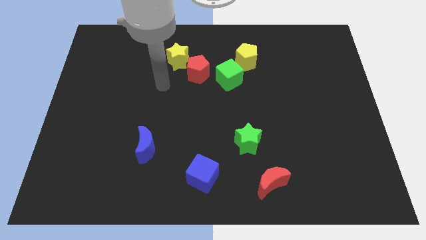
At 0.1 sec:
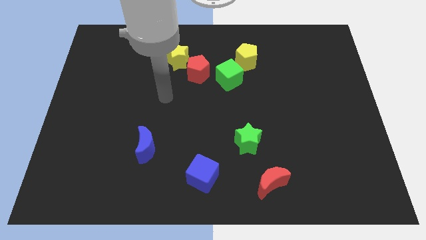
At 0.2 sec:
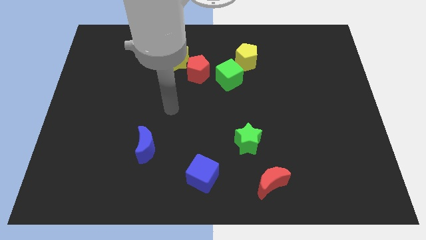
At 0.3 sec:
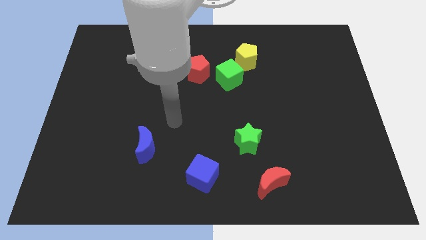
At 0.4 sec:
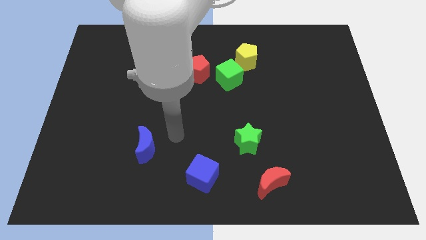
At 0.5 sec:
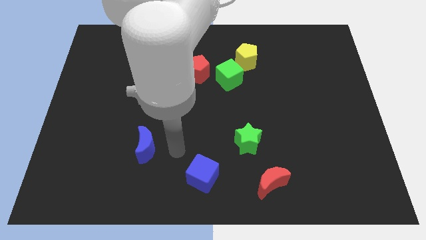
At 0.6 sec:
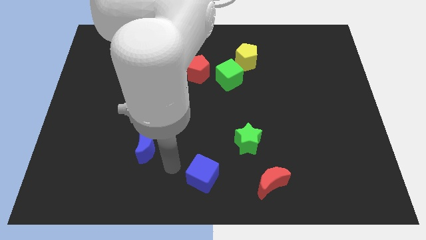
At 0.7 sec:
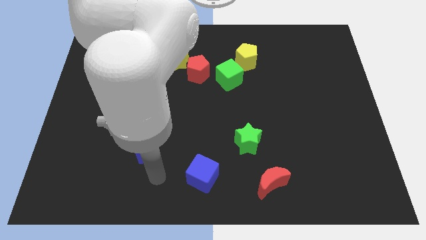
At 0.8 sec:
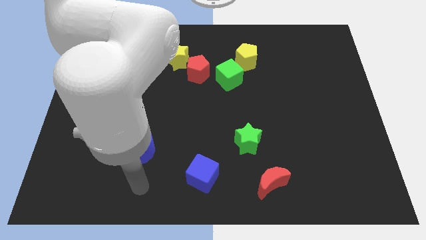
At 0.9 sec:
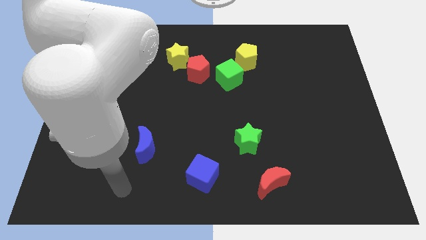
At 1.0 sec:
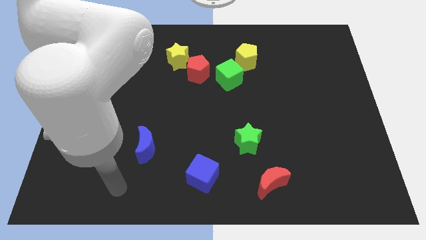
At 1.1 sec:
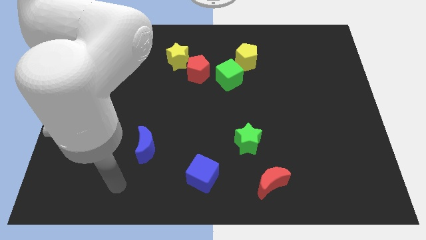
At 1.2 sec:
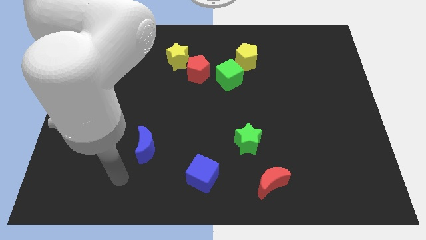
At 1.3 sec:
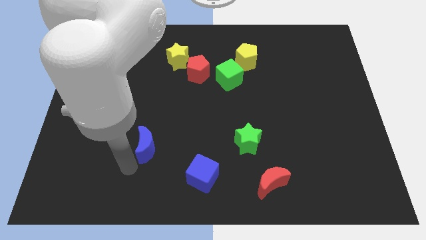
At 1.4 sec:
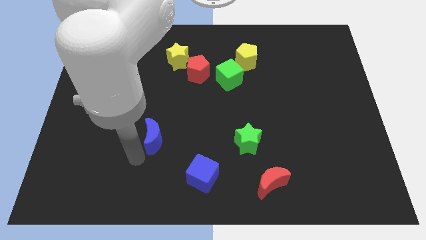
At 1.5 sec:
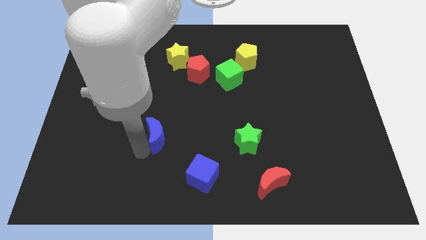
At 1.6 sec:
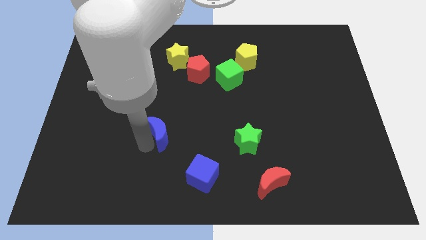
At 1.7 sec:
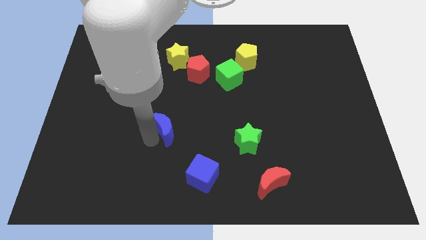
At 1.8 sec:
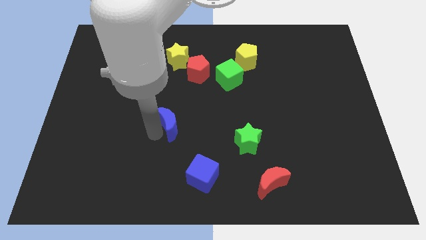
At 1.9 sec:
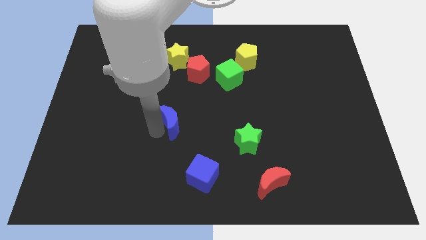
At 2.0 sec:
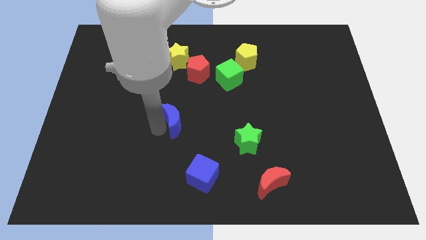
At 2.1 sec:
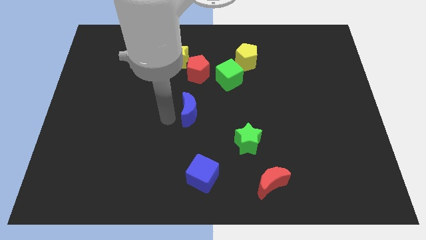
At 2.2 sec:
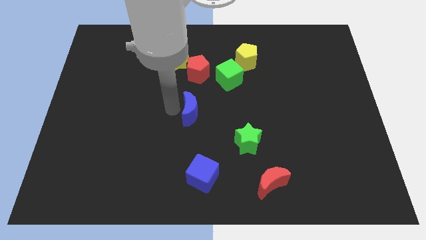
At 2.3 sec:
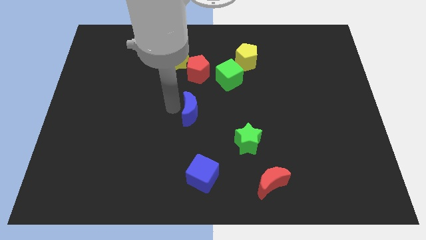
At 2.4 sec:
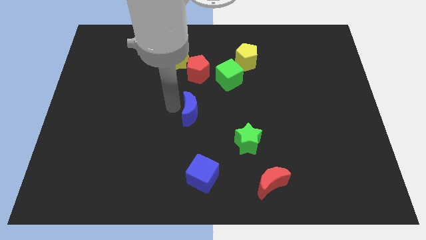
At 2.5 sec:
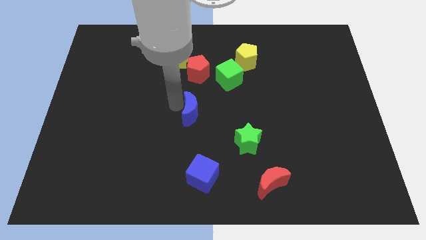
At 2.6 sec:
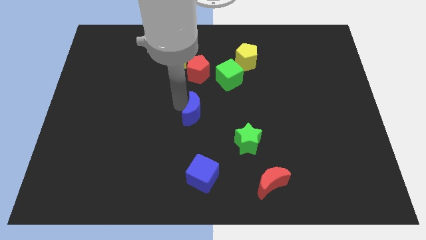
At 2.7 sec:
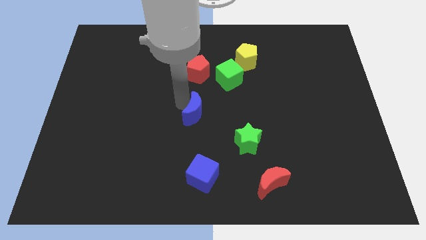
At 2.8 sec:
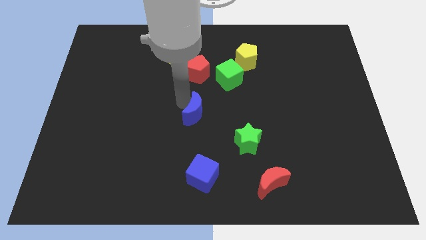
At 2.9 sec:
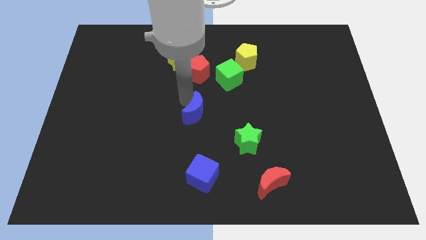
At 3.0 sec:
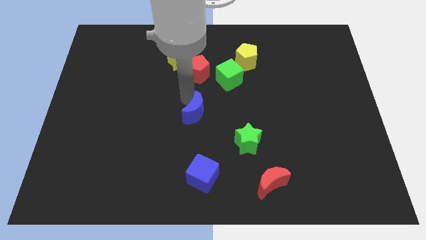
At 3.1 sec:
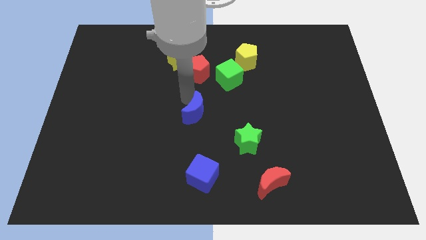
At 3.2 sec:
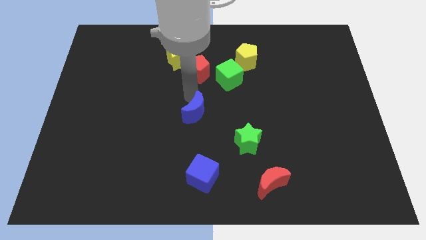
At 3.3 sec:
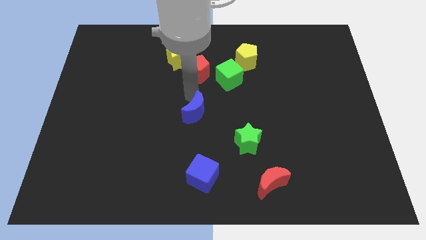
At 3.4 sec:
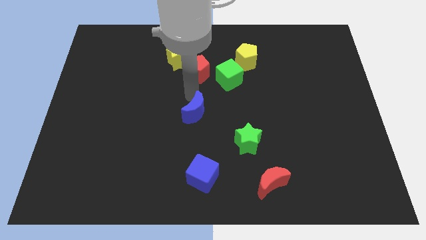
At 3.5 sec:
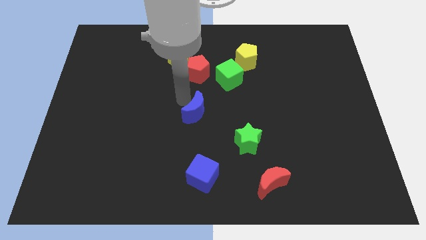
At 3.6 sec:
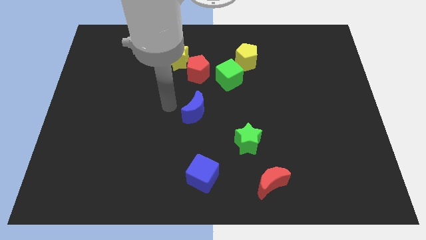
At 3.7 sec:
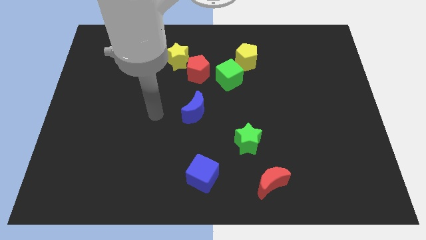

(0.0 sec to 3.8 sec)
place the blue moon in between the red pentagon and blue cube

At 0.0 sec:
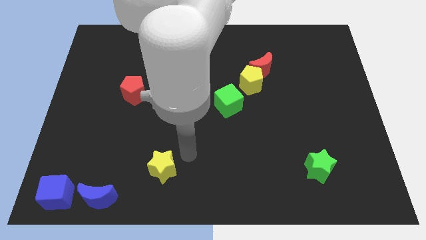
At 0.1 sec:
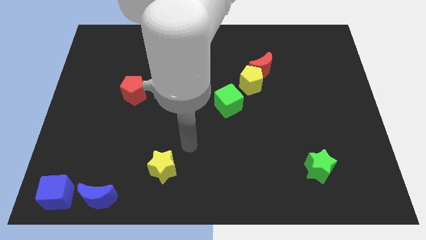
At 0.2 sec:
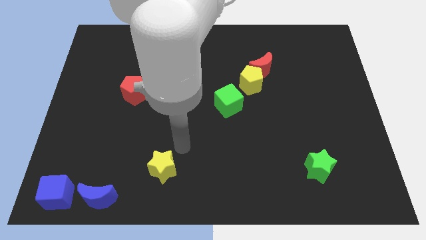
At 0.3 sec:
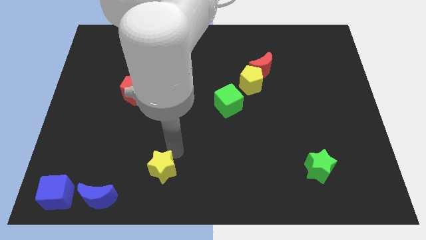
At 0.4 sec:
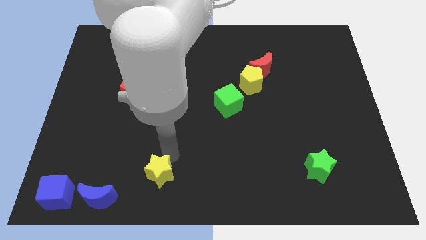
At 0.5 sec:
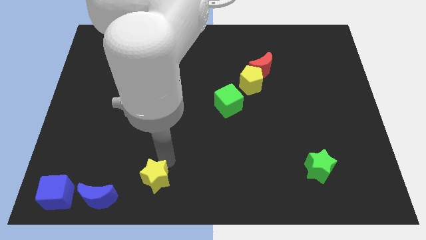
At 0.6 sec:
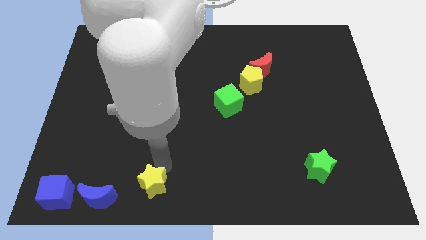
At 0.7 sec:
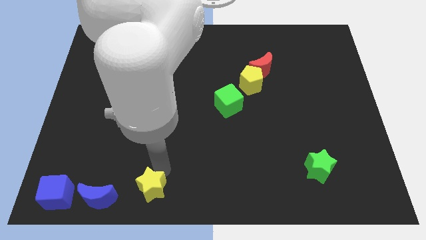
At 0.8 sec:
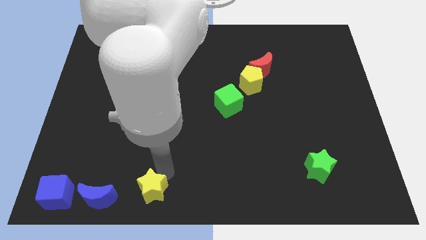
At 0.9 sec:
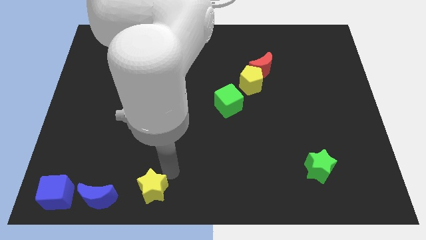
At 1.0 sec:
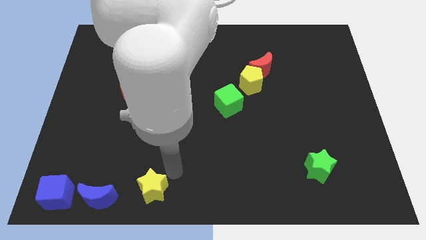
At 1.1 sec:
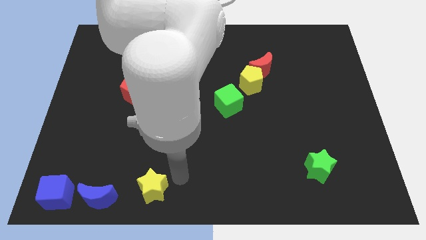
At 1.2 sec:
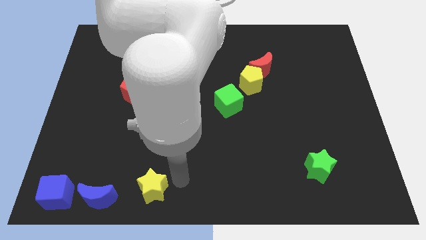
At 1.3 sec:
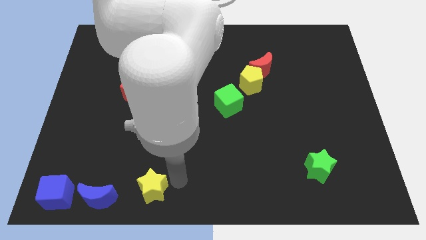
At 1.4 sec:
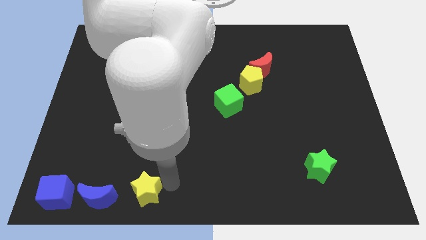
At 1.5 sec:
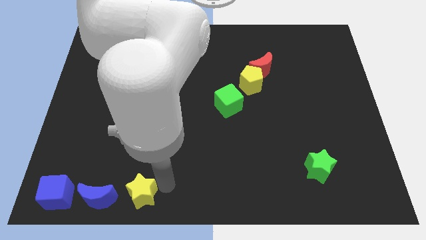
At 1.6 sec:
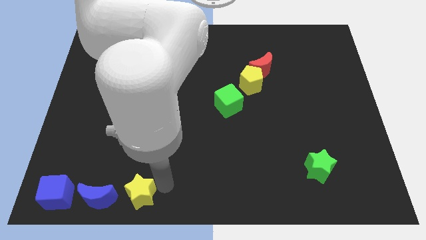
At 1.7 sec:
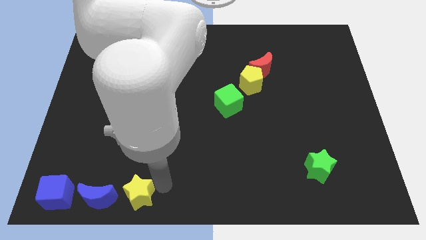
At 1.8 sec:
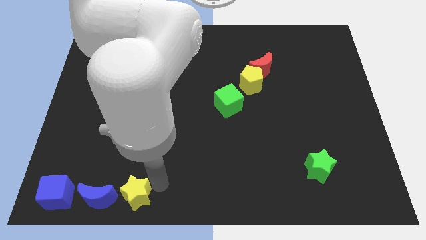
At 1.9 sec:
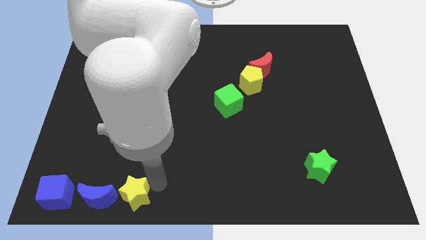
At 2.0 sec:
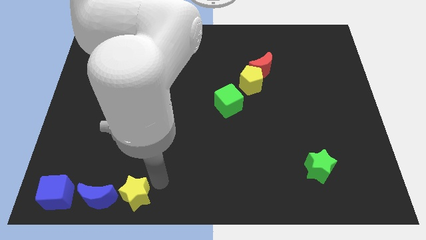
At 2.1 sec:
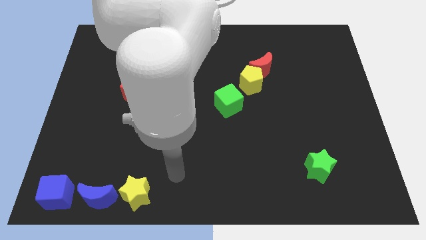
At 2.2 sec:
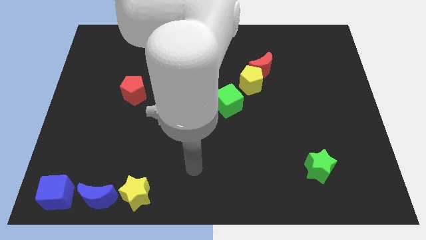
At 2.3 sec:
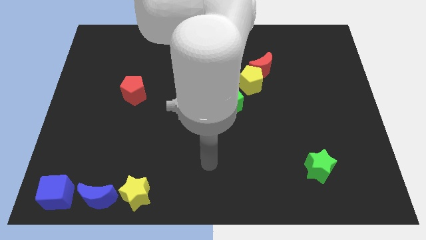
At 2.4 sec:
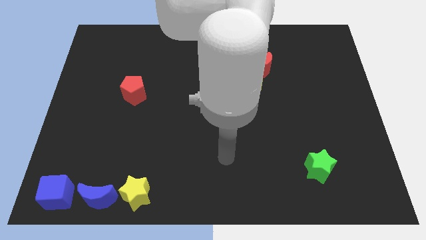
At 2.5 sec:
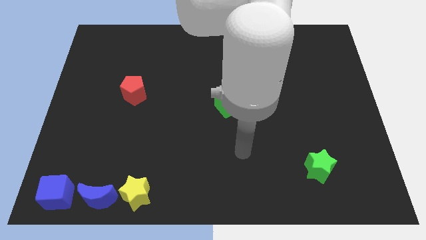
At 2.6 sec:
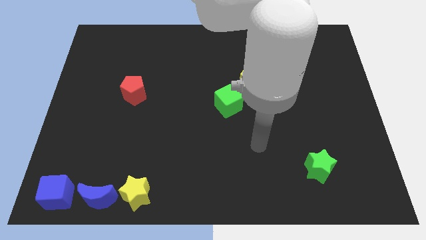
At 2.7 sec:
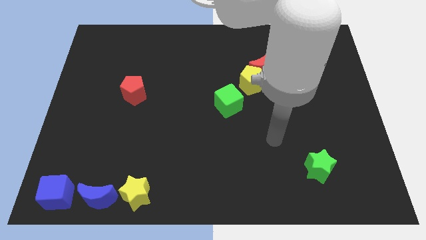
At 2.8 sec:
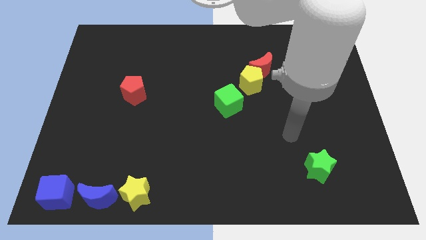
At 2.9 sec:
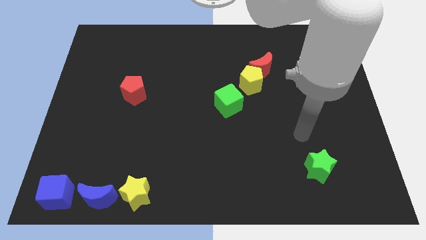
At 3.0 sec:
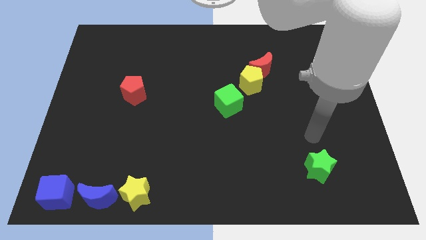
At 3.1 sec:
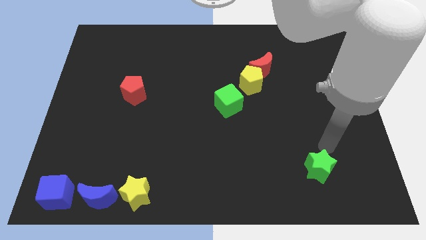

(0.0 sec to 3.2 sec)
move the yellow star to the right of the blue crescent

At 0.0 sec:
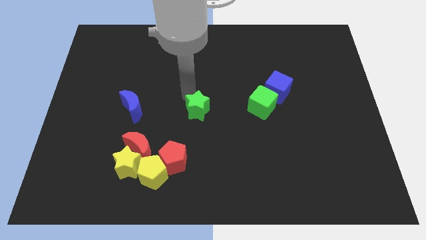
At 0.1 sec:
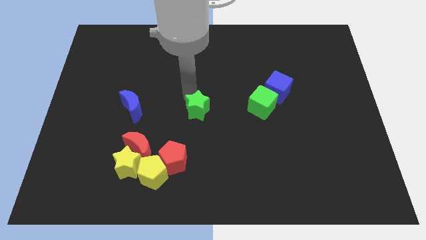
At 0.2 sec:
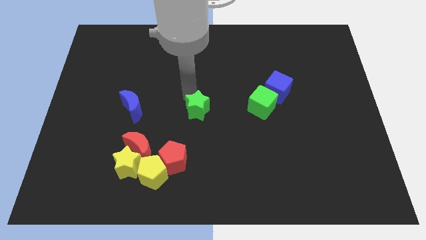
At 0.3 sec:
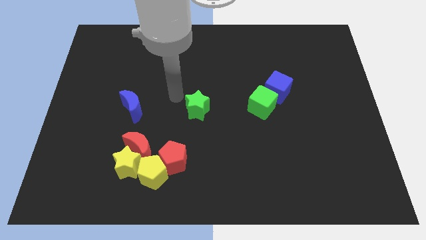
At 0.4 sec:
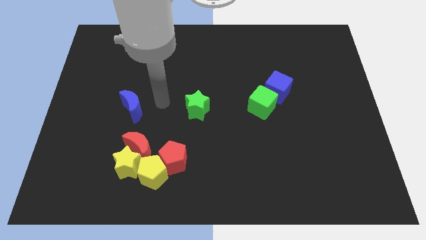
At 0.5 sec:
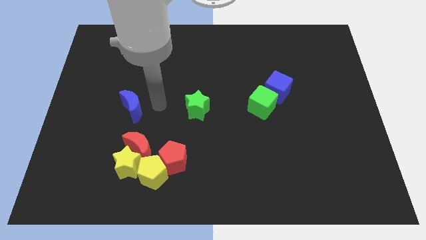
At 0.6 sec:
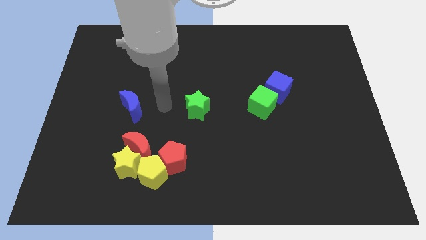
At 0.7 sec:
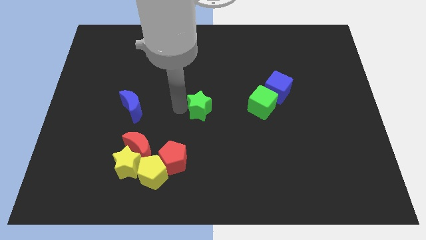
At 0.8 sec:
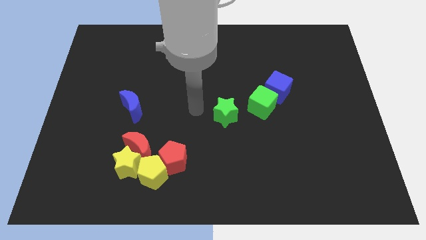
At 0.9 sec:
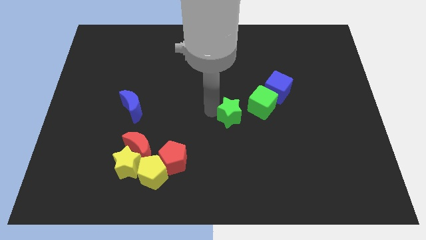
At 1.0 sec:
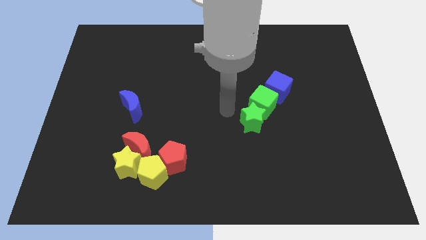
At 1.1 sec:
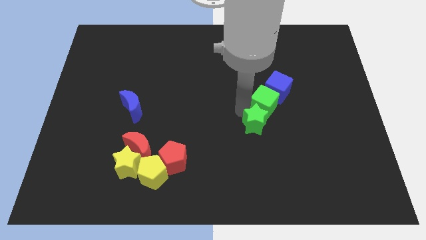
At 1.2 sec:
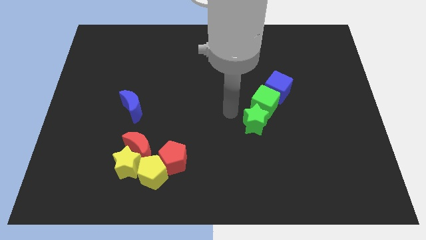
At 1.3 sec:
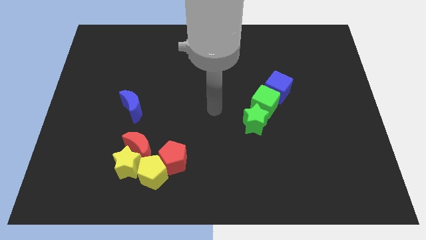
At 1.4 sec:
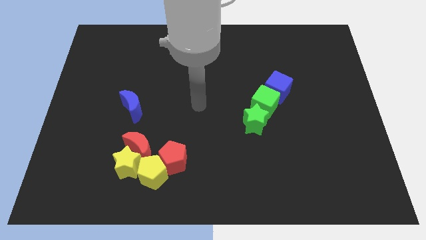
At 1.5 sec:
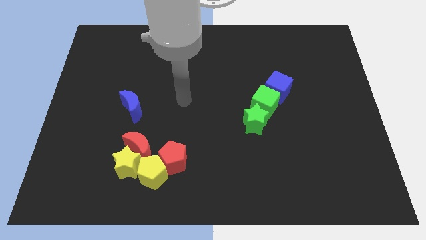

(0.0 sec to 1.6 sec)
place the green star below the green cube

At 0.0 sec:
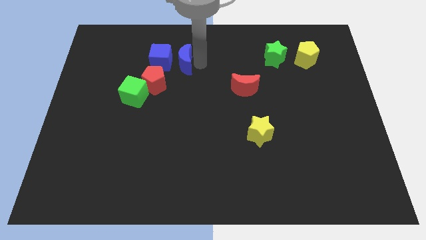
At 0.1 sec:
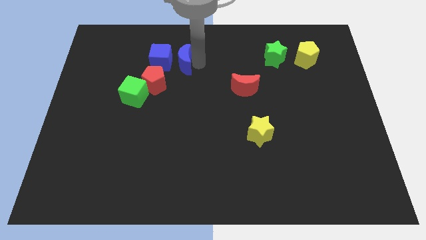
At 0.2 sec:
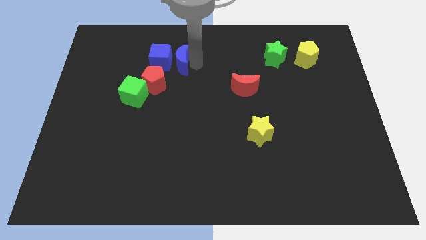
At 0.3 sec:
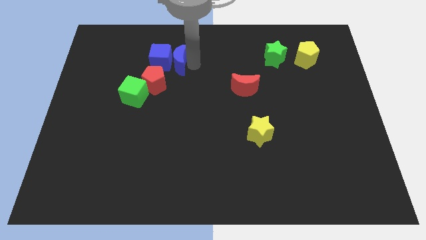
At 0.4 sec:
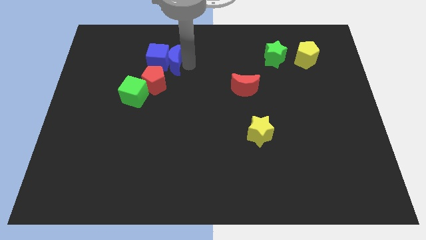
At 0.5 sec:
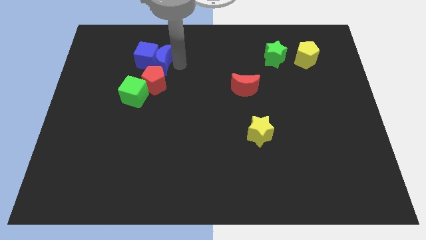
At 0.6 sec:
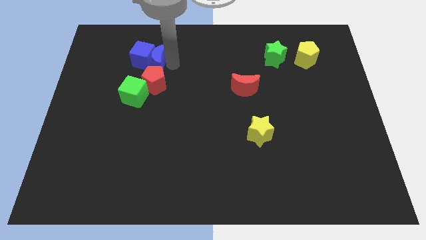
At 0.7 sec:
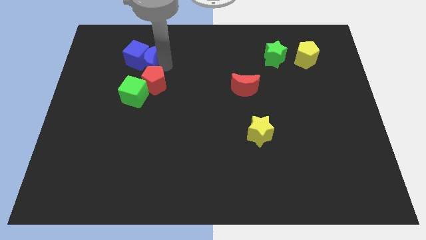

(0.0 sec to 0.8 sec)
push blue crescent above red pentagon
